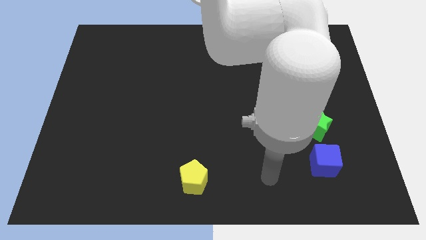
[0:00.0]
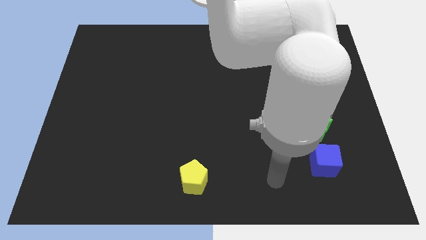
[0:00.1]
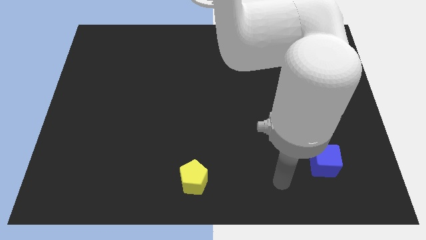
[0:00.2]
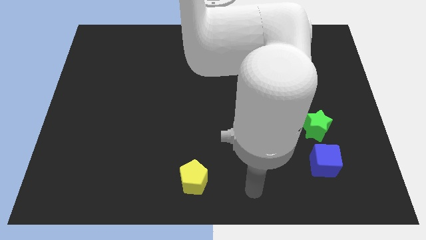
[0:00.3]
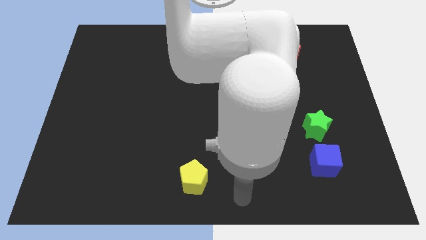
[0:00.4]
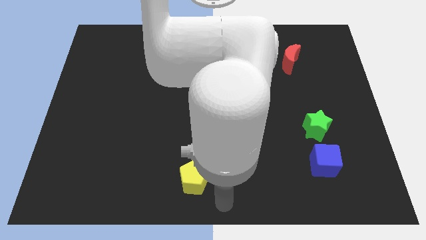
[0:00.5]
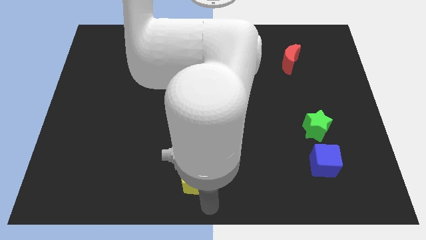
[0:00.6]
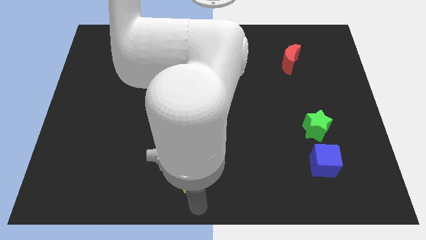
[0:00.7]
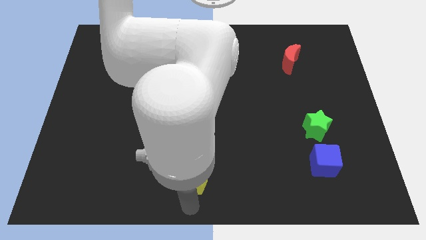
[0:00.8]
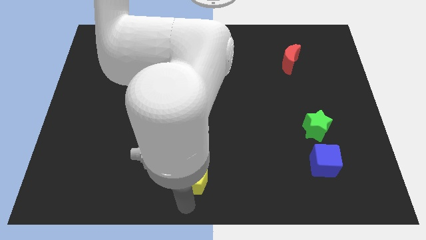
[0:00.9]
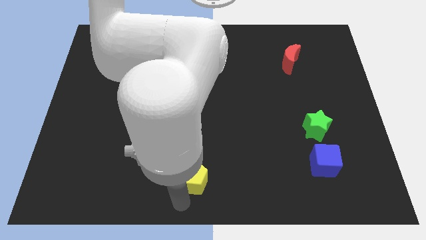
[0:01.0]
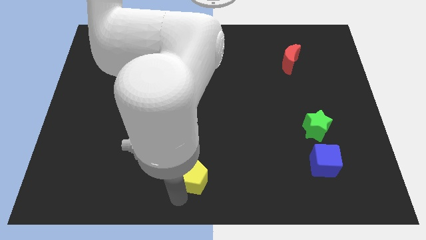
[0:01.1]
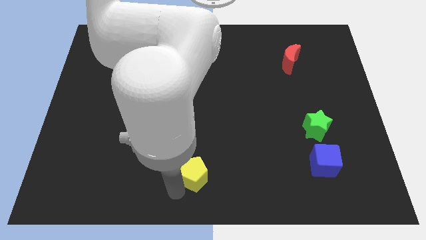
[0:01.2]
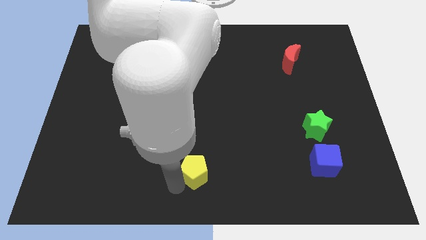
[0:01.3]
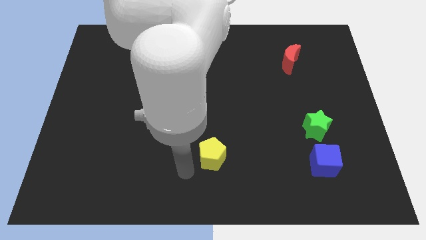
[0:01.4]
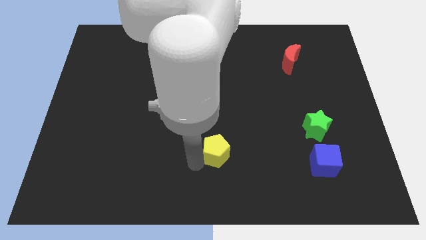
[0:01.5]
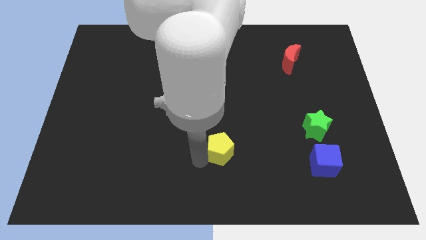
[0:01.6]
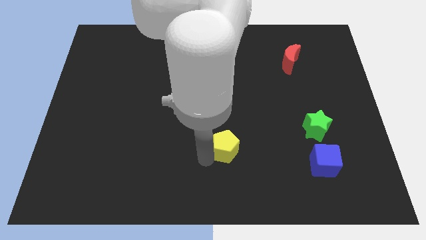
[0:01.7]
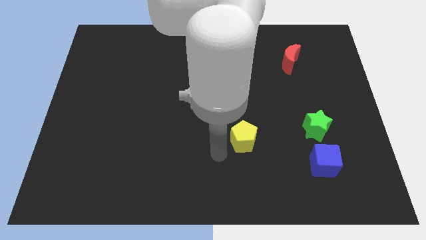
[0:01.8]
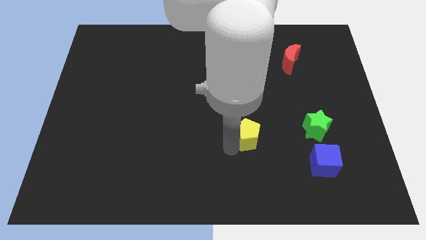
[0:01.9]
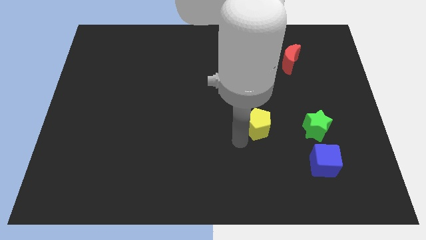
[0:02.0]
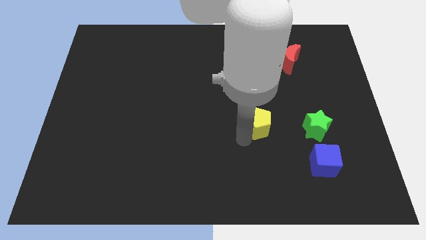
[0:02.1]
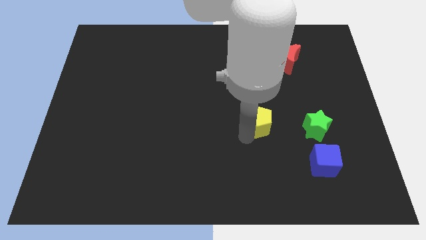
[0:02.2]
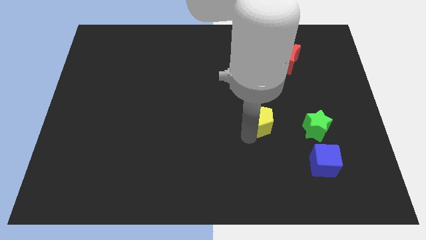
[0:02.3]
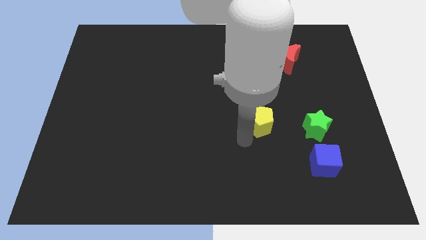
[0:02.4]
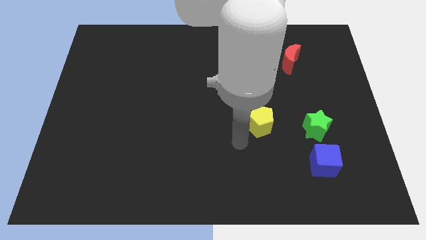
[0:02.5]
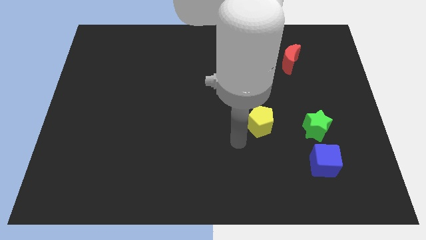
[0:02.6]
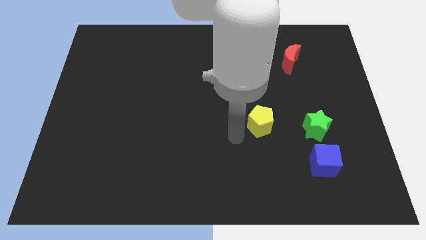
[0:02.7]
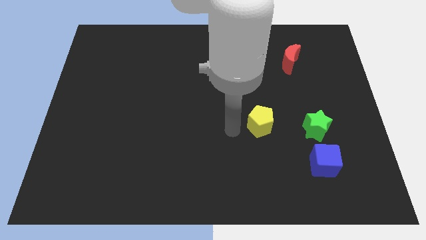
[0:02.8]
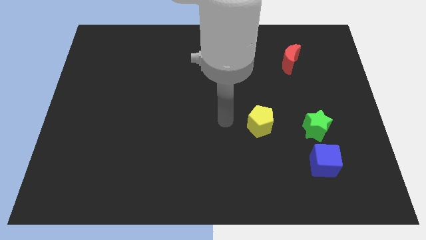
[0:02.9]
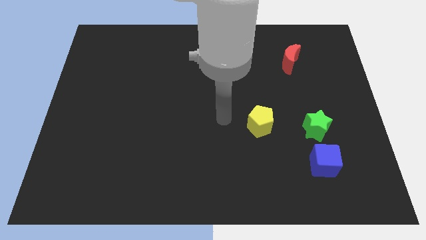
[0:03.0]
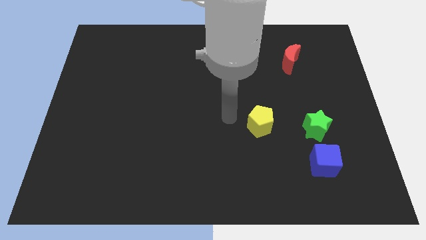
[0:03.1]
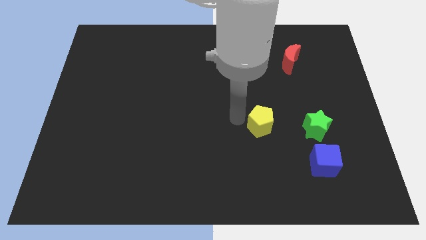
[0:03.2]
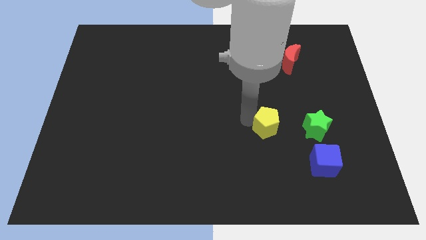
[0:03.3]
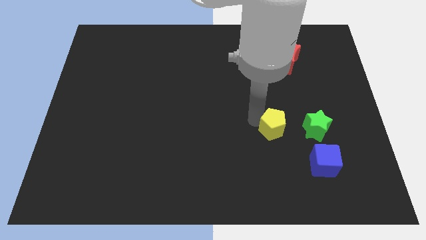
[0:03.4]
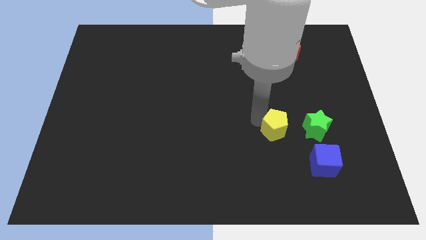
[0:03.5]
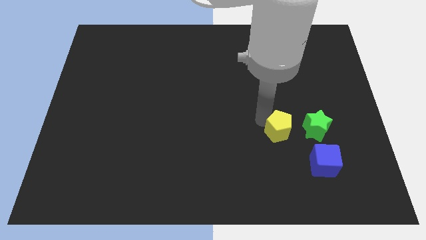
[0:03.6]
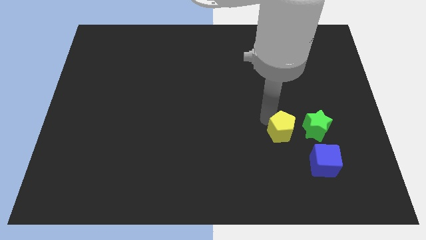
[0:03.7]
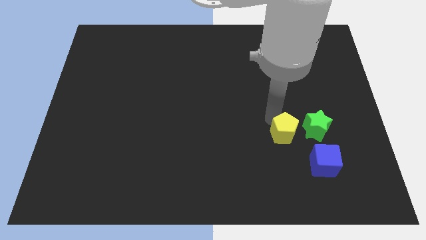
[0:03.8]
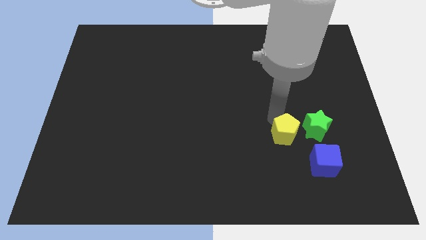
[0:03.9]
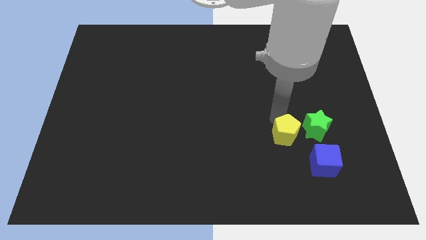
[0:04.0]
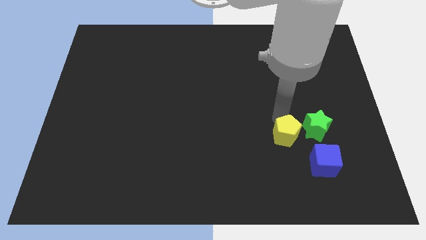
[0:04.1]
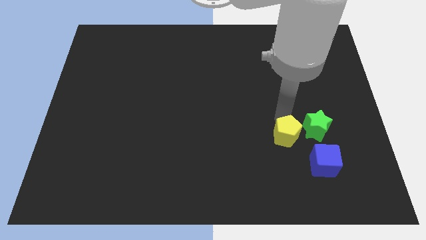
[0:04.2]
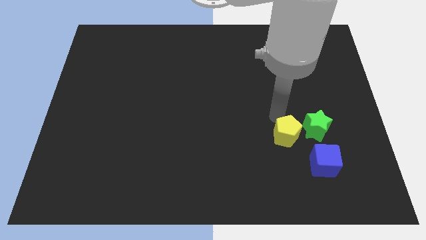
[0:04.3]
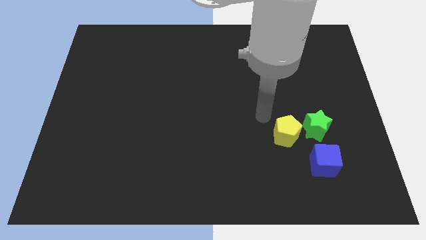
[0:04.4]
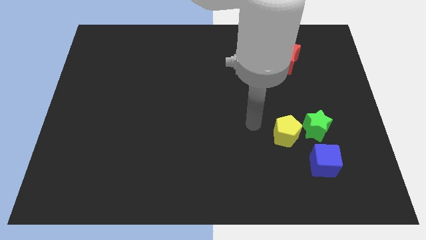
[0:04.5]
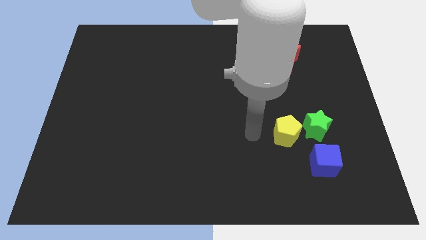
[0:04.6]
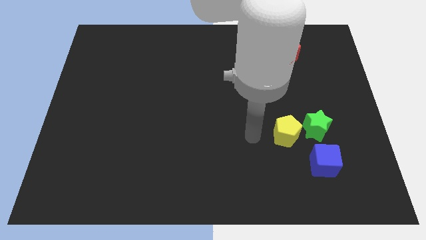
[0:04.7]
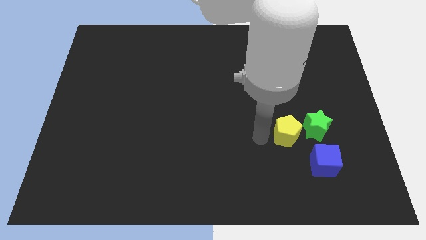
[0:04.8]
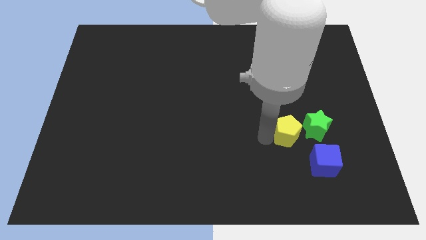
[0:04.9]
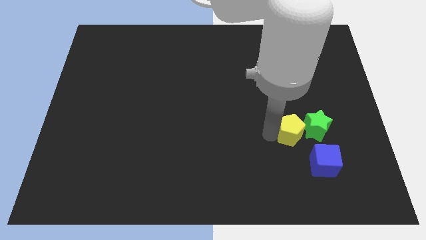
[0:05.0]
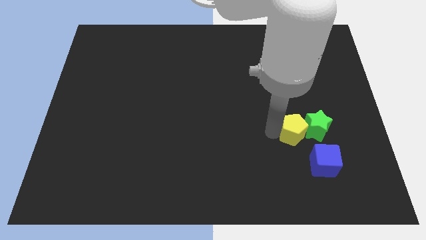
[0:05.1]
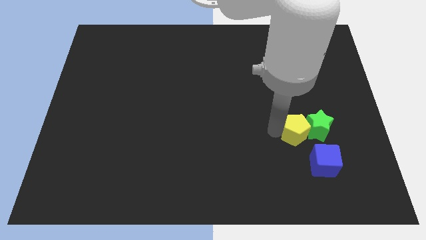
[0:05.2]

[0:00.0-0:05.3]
put the yellow pentagon next to the green block

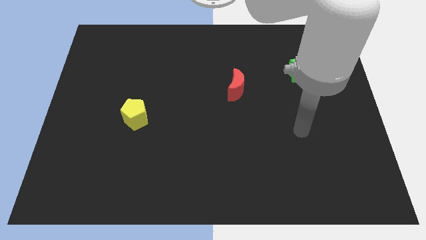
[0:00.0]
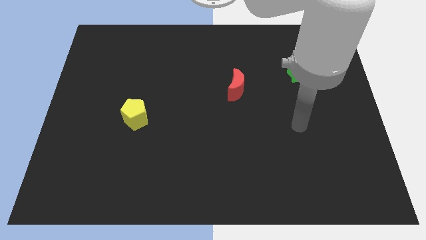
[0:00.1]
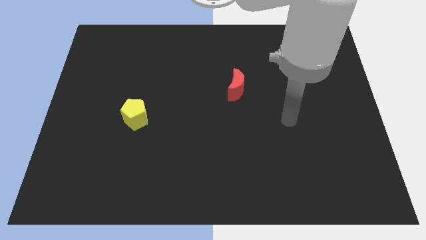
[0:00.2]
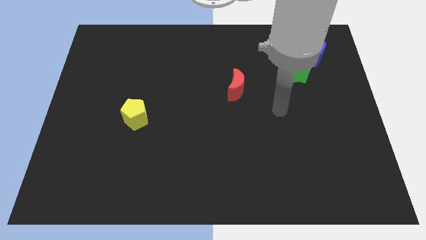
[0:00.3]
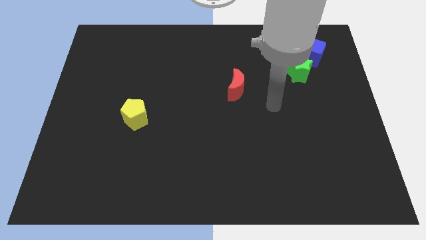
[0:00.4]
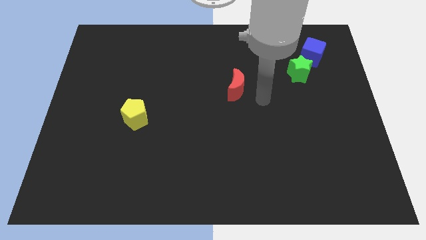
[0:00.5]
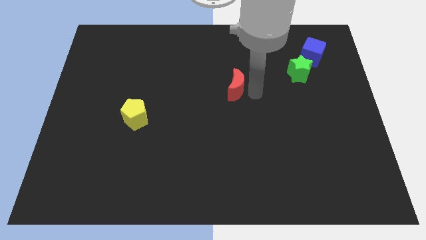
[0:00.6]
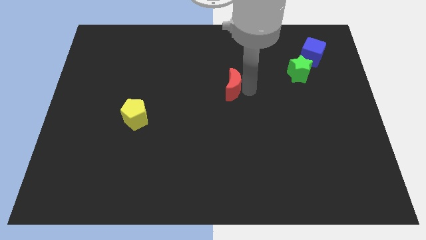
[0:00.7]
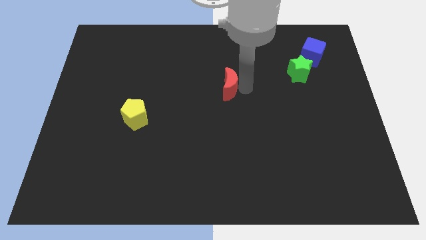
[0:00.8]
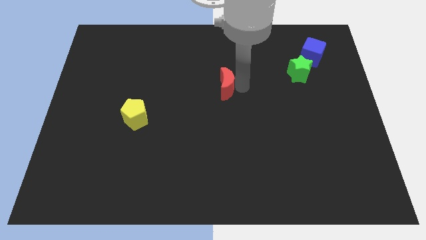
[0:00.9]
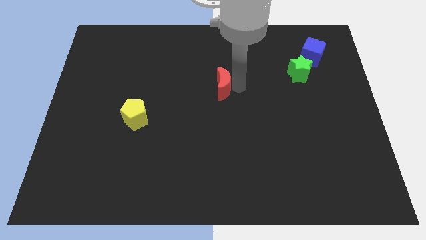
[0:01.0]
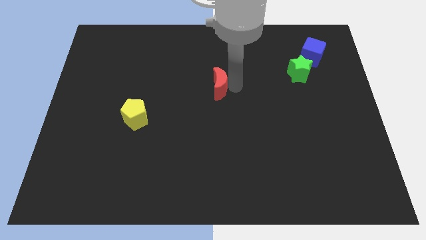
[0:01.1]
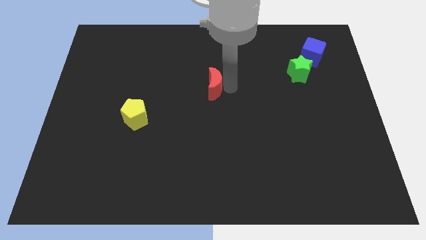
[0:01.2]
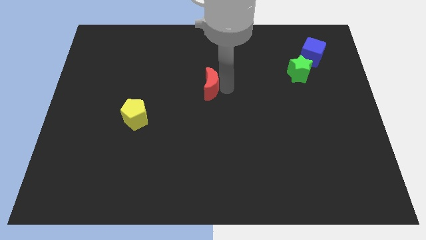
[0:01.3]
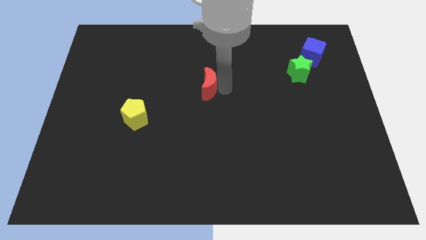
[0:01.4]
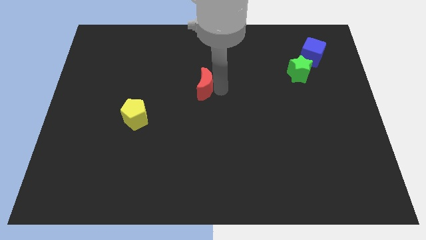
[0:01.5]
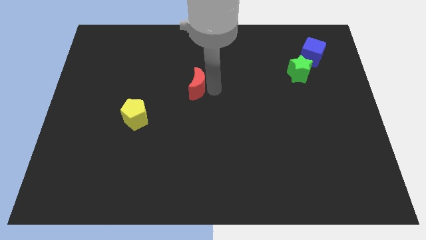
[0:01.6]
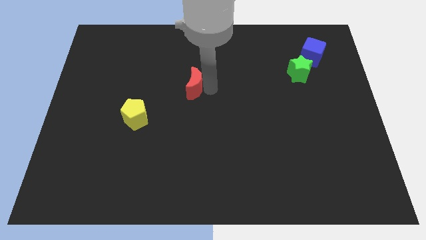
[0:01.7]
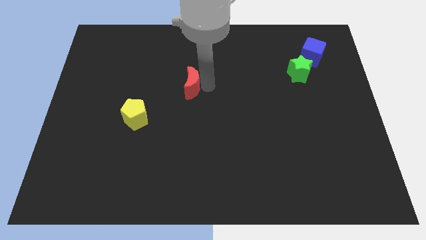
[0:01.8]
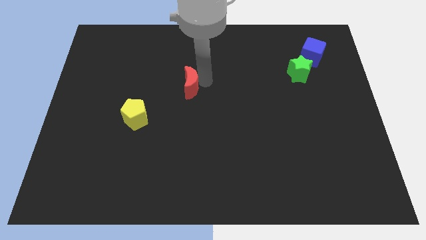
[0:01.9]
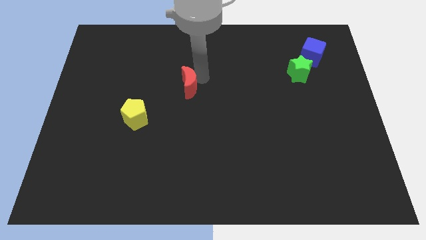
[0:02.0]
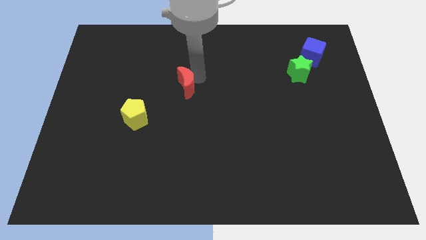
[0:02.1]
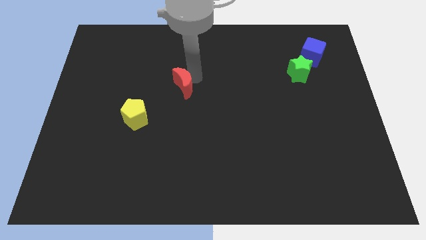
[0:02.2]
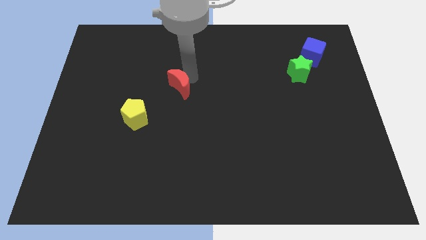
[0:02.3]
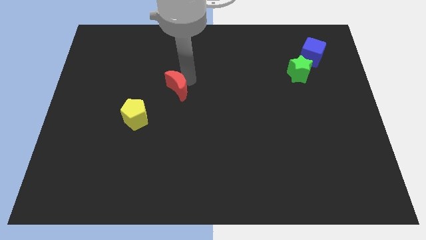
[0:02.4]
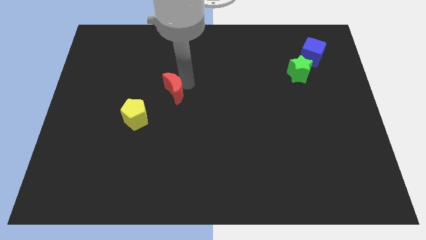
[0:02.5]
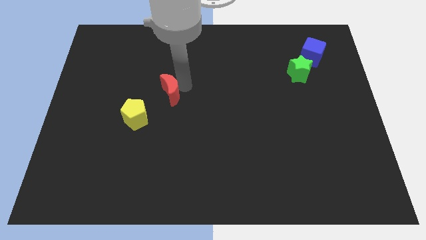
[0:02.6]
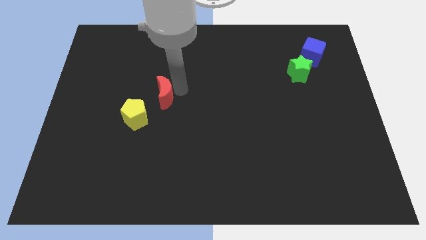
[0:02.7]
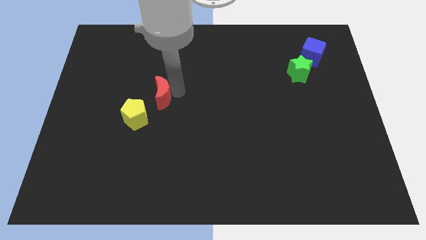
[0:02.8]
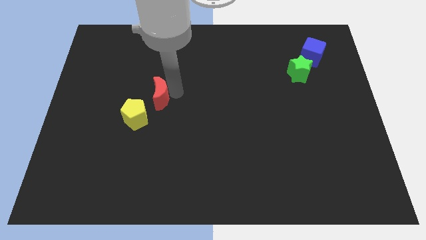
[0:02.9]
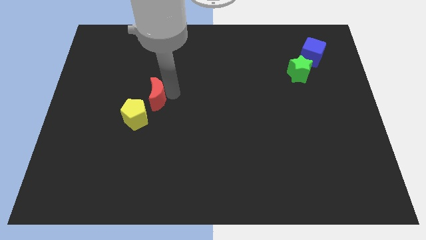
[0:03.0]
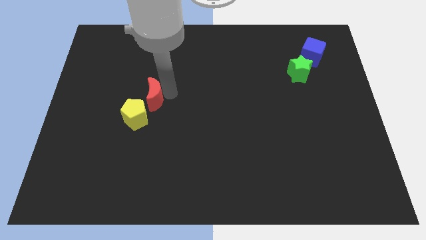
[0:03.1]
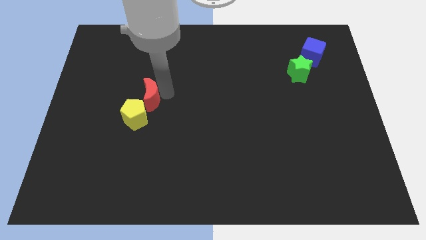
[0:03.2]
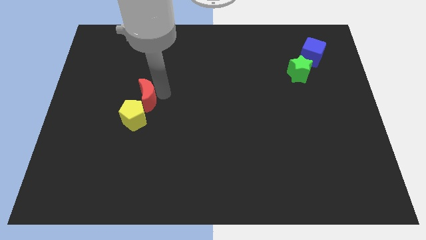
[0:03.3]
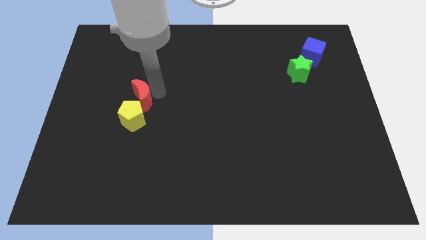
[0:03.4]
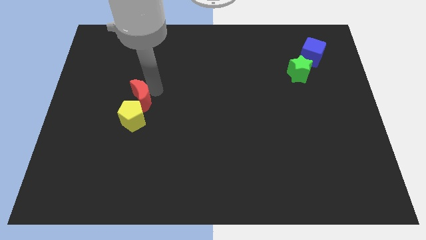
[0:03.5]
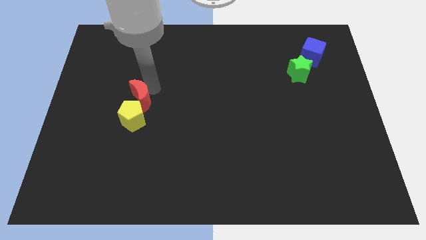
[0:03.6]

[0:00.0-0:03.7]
push the moon next to the yellow pentagon
